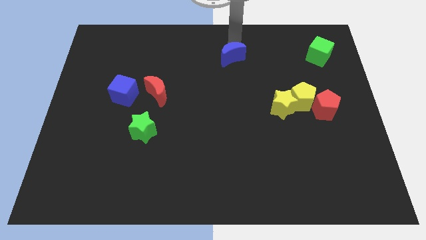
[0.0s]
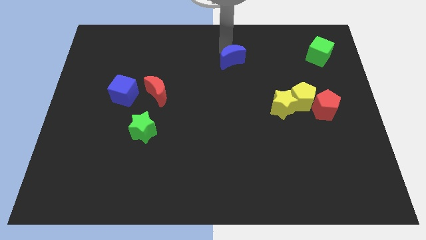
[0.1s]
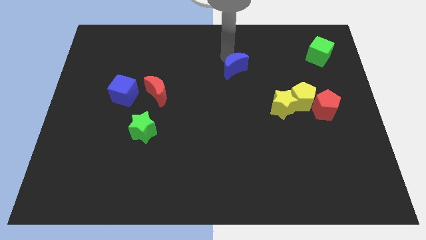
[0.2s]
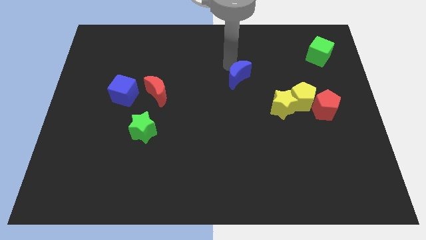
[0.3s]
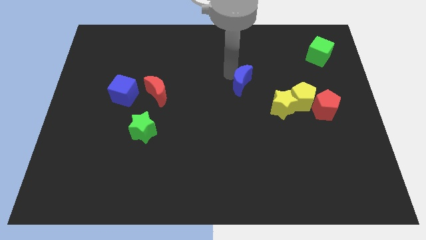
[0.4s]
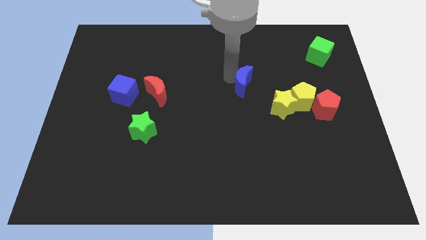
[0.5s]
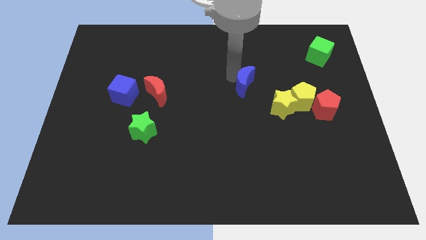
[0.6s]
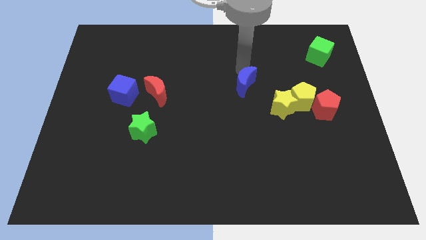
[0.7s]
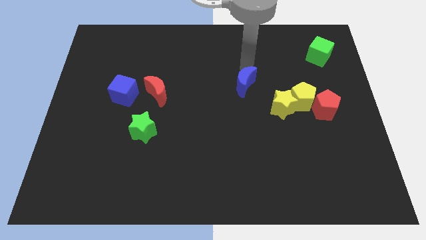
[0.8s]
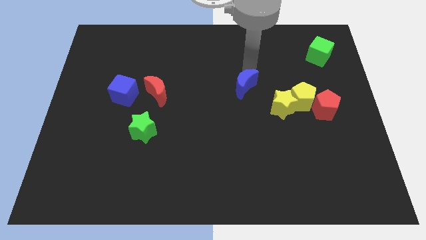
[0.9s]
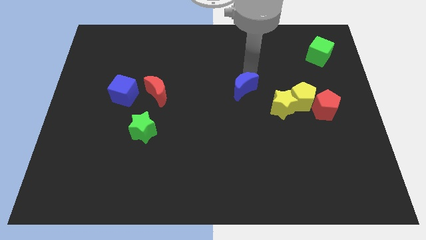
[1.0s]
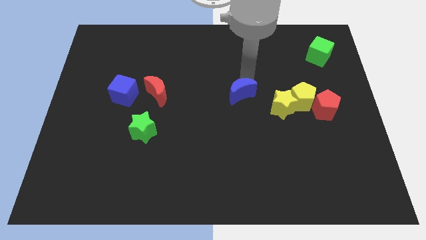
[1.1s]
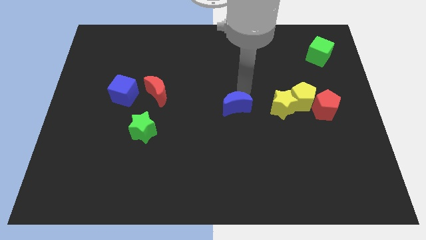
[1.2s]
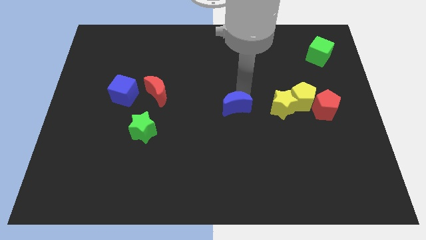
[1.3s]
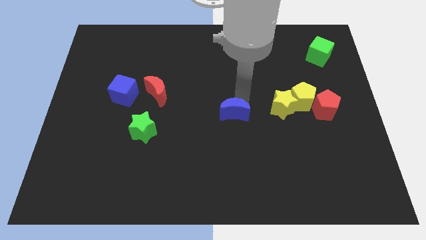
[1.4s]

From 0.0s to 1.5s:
slide the blue moon parallel left to the yellow star

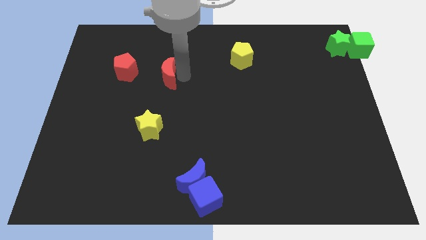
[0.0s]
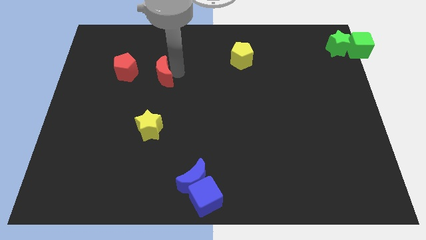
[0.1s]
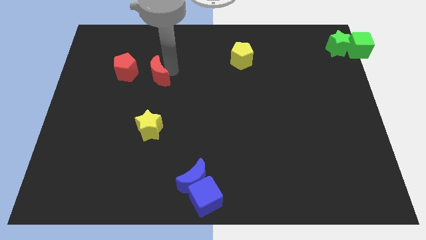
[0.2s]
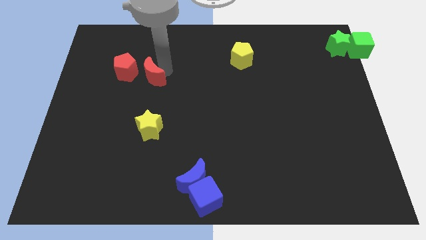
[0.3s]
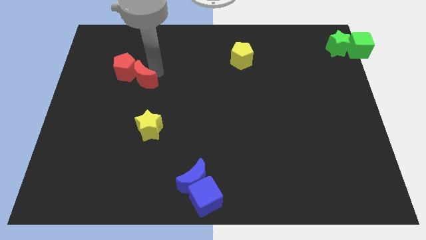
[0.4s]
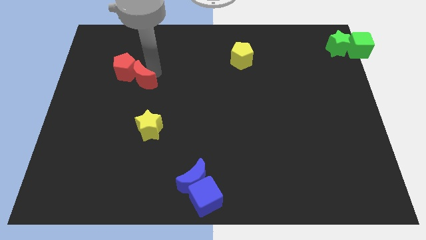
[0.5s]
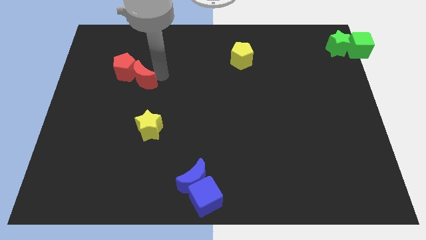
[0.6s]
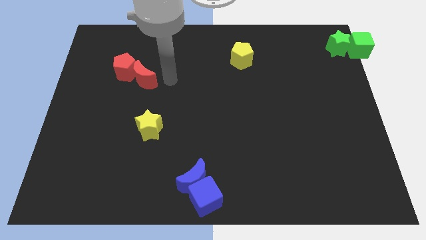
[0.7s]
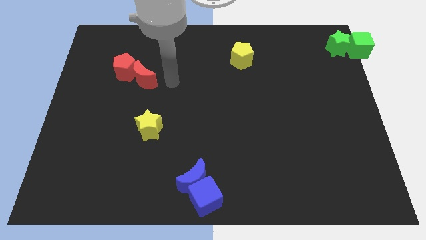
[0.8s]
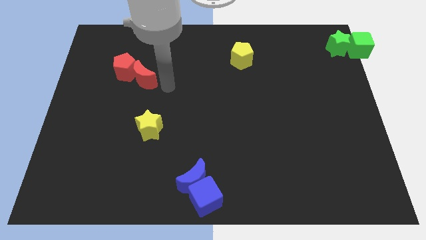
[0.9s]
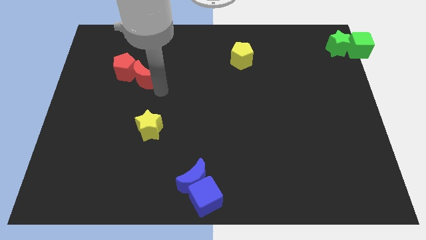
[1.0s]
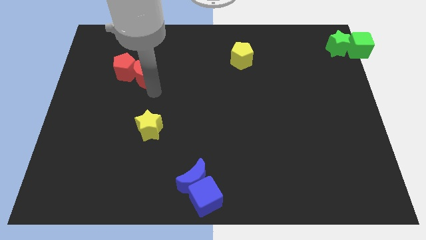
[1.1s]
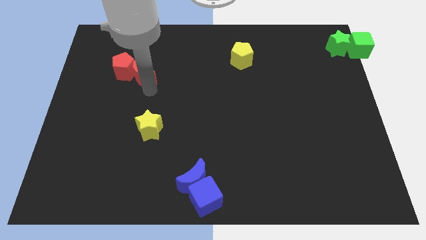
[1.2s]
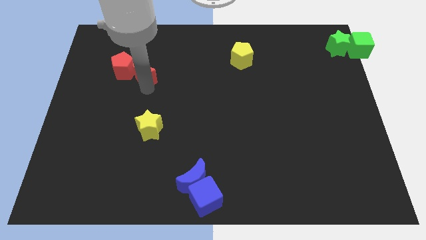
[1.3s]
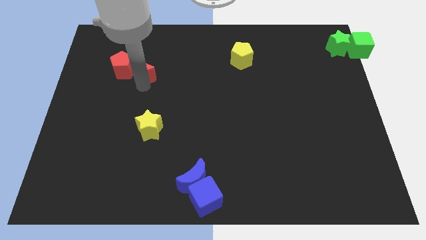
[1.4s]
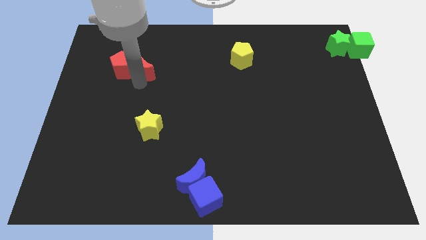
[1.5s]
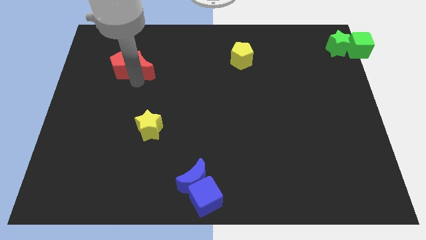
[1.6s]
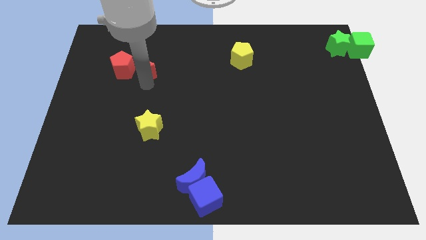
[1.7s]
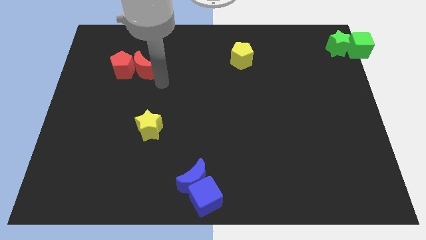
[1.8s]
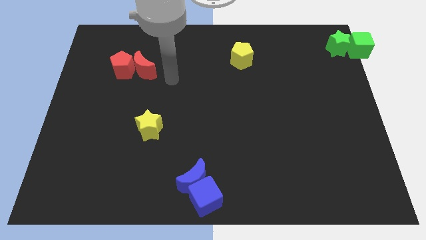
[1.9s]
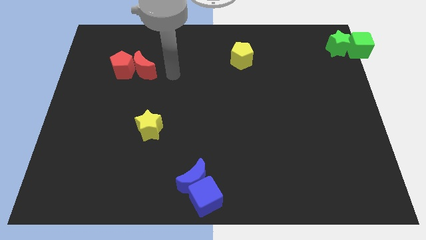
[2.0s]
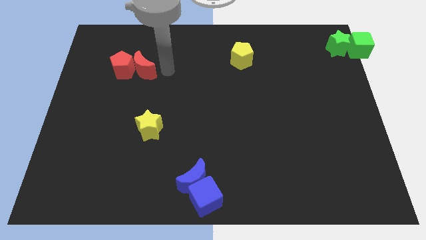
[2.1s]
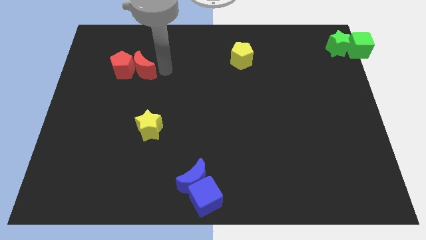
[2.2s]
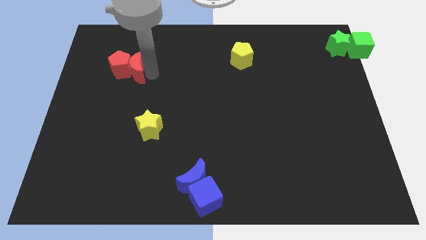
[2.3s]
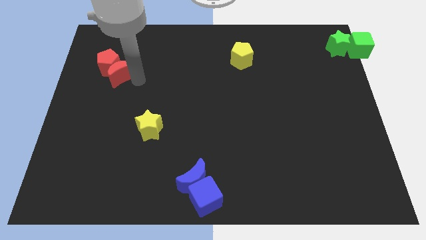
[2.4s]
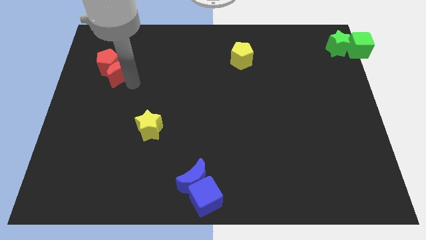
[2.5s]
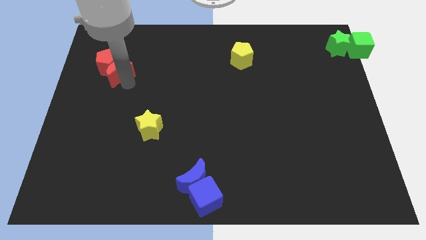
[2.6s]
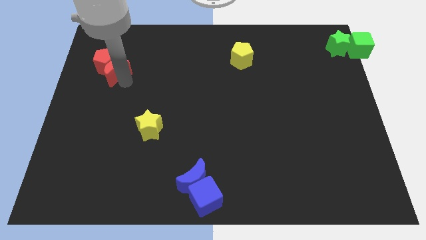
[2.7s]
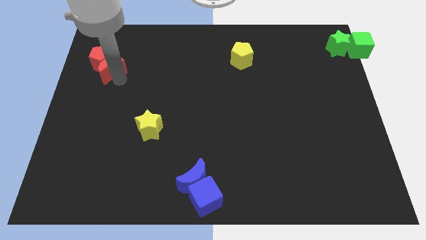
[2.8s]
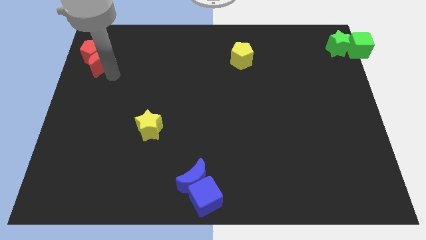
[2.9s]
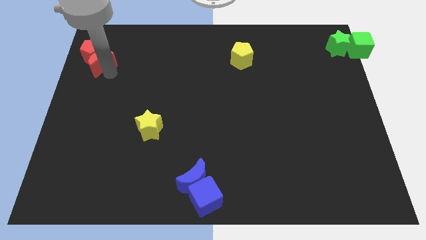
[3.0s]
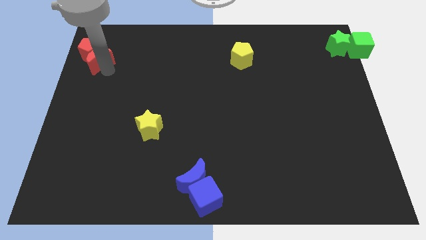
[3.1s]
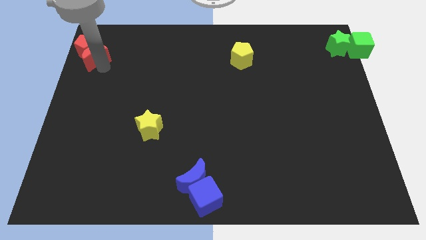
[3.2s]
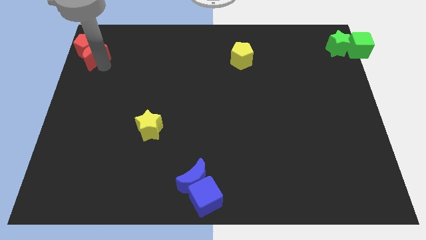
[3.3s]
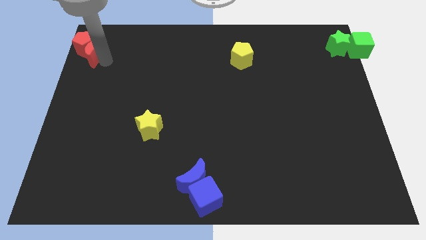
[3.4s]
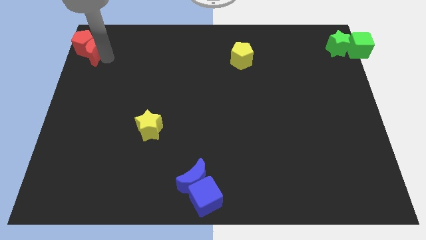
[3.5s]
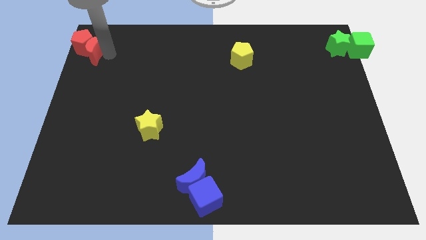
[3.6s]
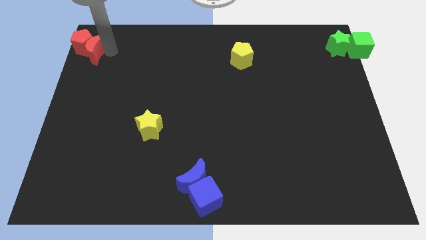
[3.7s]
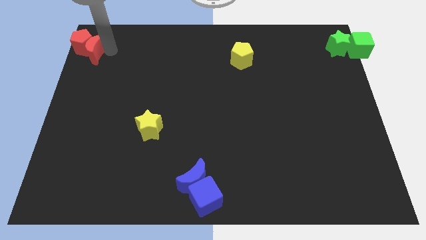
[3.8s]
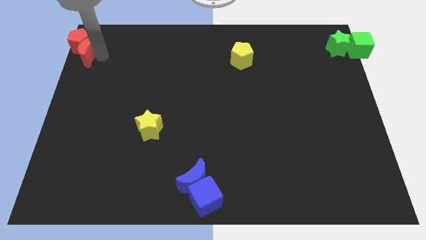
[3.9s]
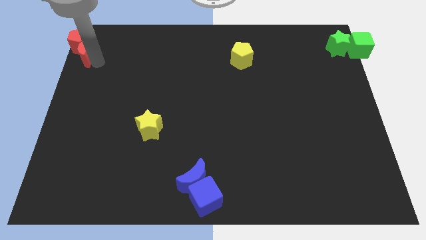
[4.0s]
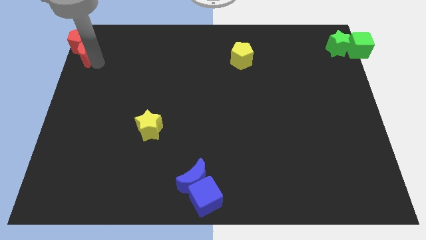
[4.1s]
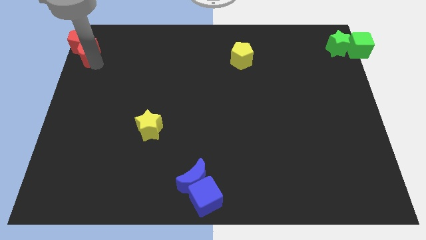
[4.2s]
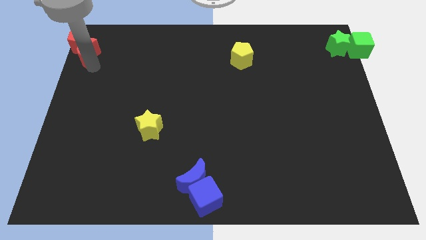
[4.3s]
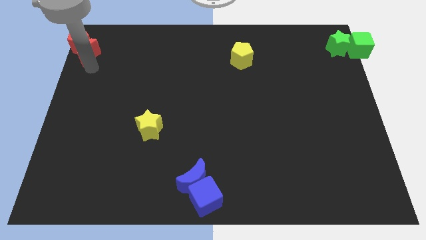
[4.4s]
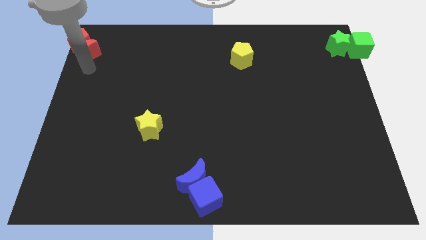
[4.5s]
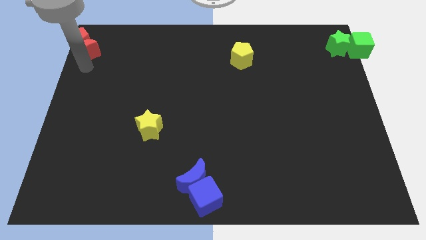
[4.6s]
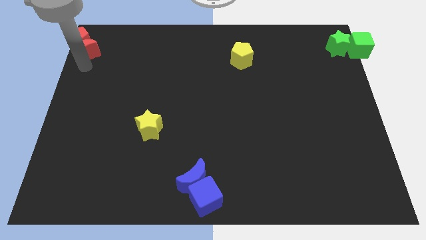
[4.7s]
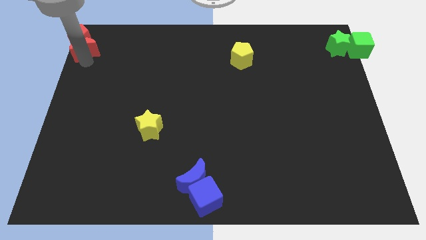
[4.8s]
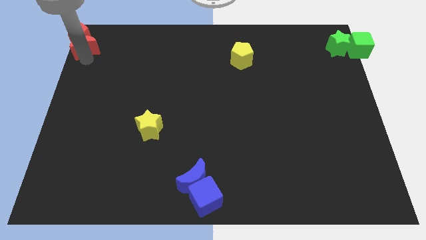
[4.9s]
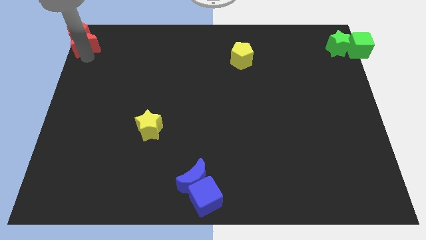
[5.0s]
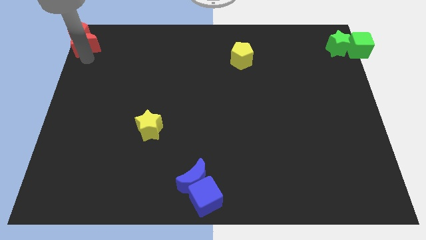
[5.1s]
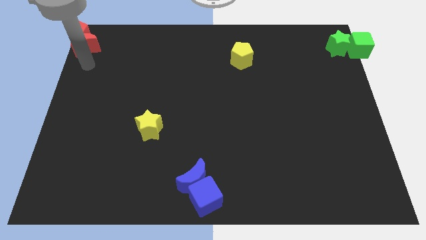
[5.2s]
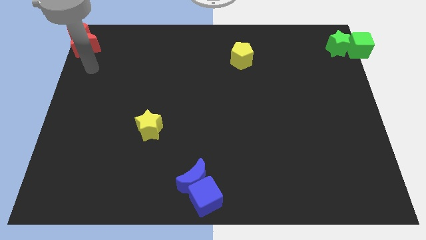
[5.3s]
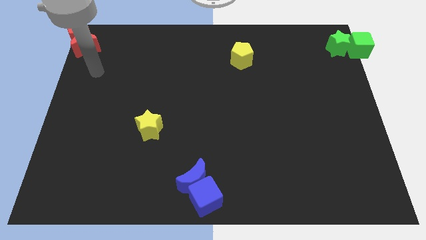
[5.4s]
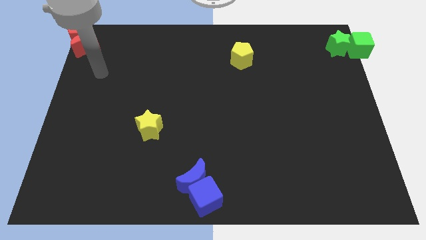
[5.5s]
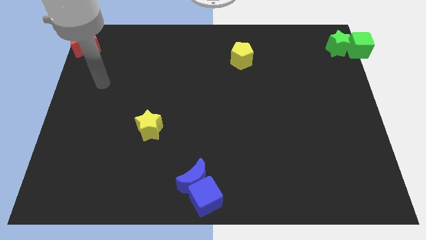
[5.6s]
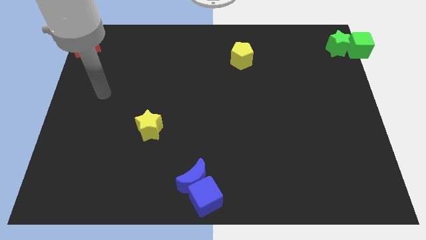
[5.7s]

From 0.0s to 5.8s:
place the red moon and red pentagon at the top left corner of the board

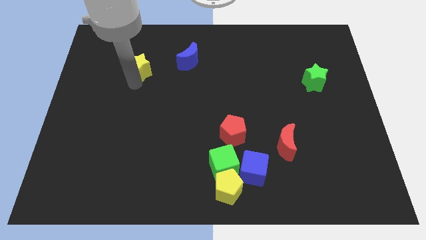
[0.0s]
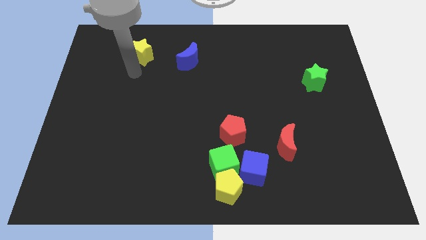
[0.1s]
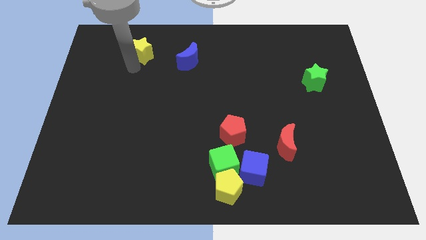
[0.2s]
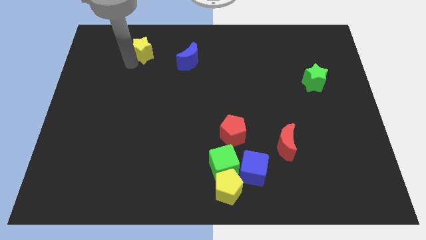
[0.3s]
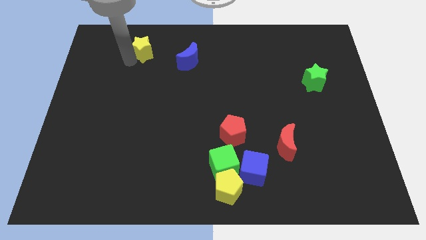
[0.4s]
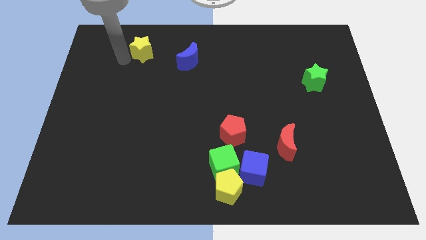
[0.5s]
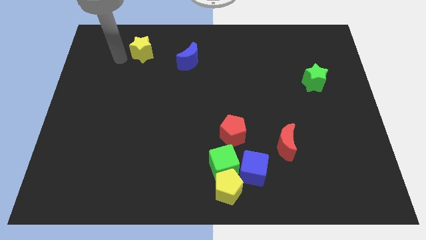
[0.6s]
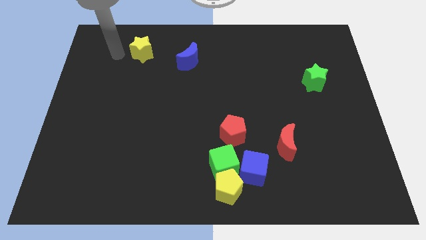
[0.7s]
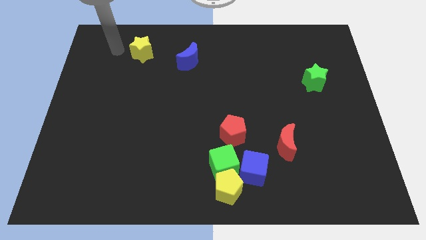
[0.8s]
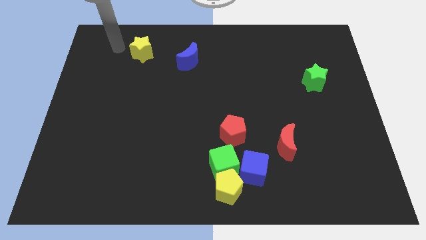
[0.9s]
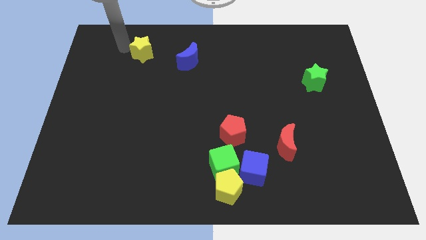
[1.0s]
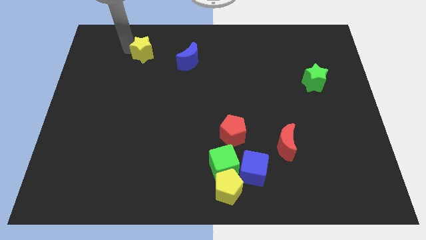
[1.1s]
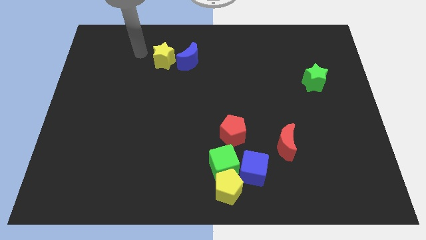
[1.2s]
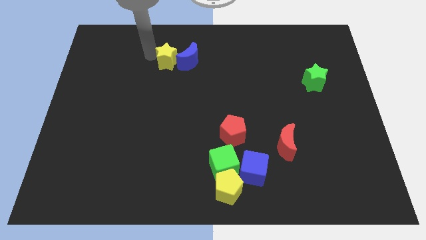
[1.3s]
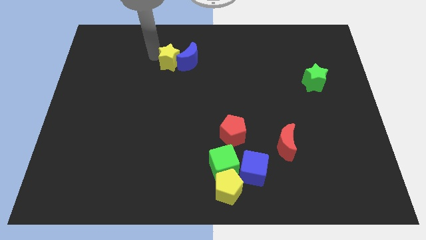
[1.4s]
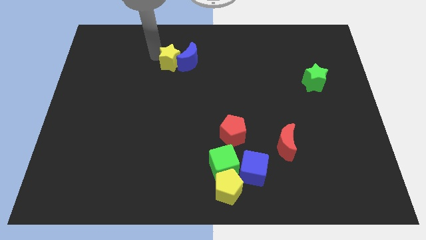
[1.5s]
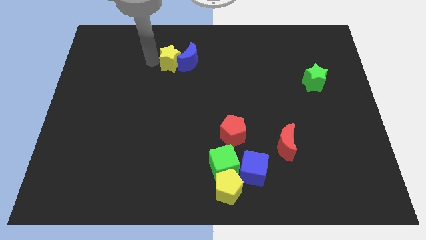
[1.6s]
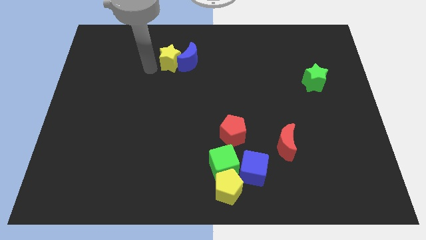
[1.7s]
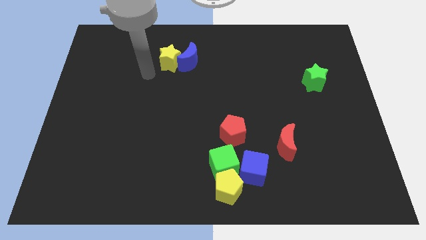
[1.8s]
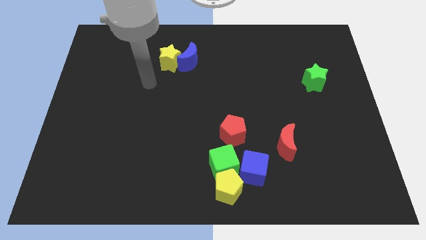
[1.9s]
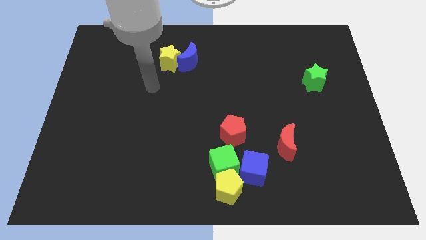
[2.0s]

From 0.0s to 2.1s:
push yellow star into blue moon
